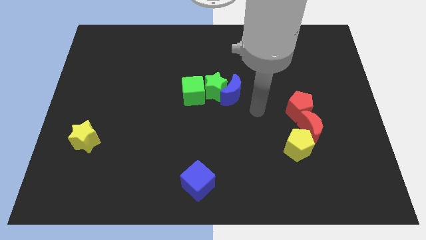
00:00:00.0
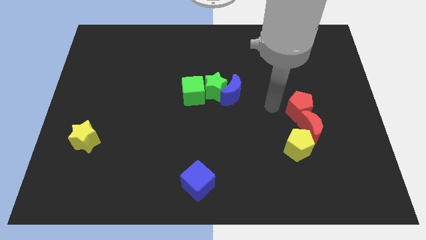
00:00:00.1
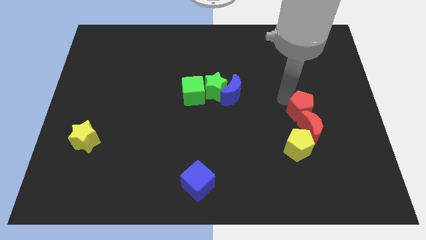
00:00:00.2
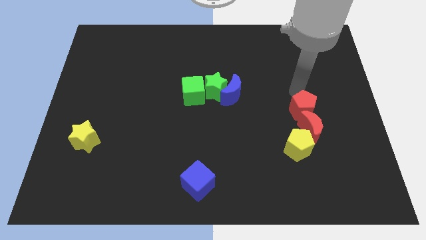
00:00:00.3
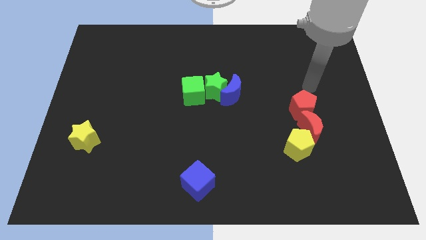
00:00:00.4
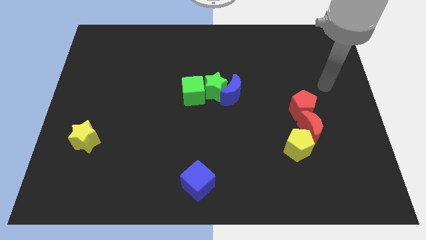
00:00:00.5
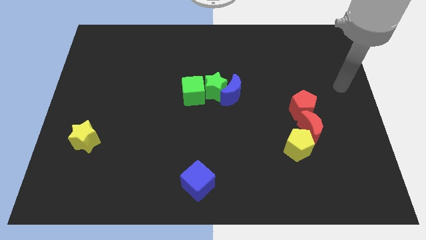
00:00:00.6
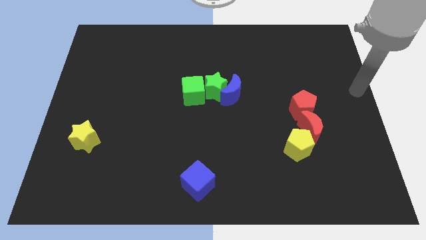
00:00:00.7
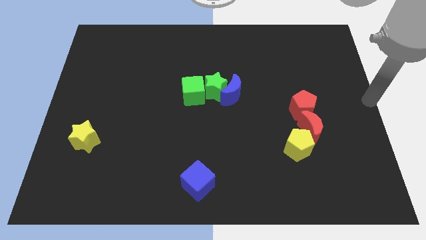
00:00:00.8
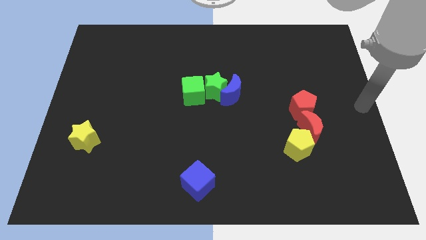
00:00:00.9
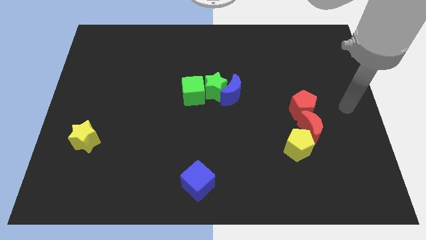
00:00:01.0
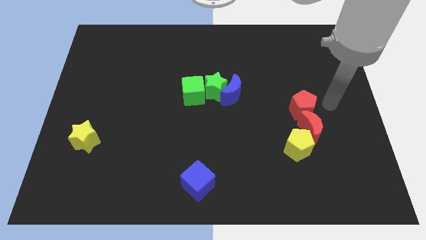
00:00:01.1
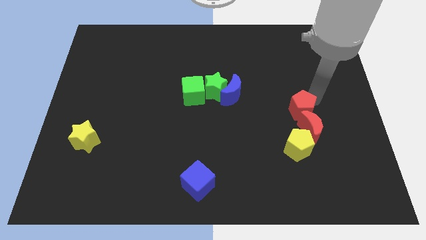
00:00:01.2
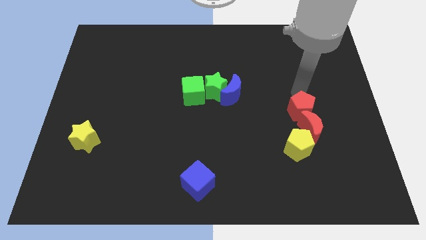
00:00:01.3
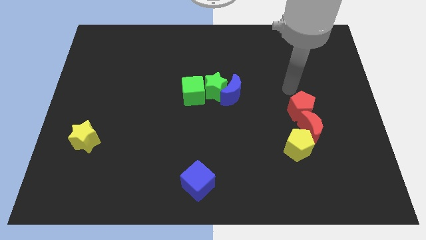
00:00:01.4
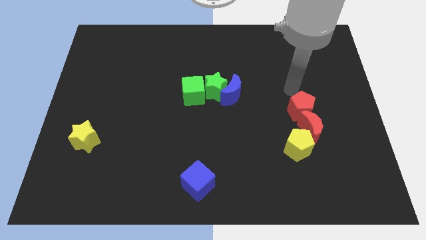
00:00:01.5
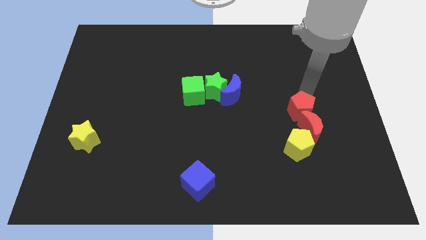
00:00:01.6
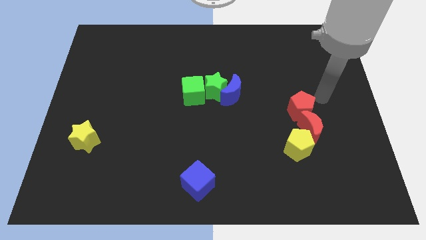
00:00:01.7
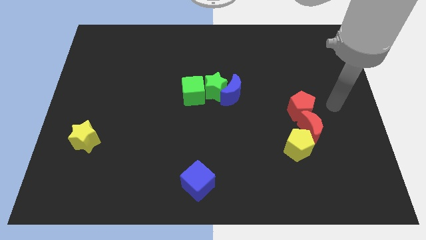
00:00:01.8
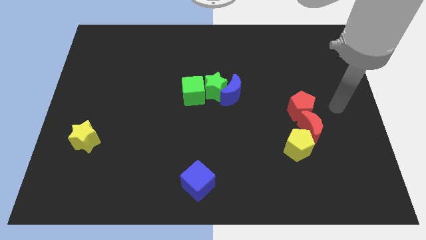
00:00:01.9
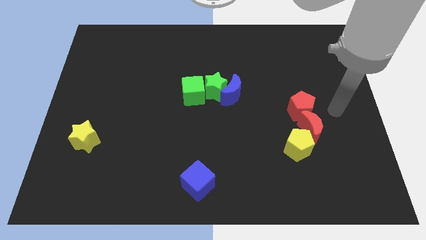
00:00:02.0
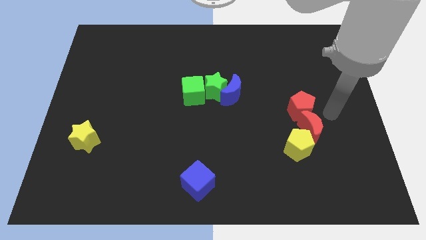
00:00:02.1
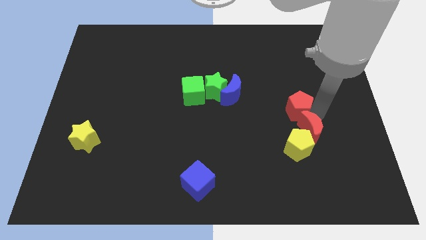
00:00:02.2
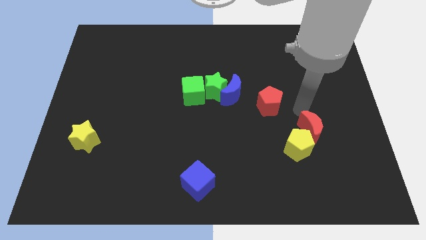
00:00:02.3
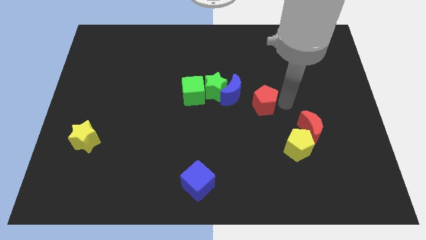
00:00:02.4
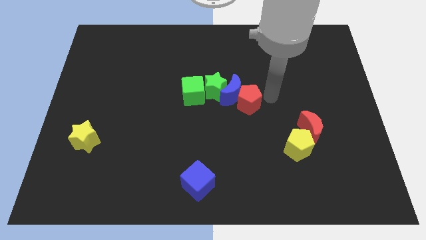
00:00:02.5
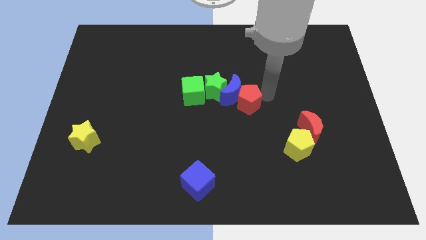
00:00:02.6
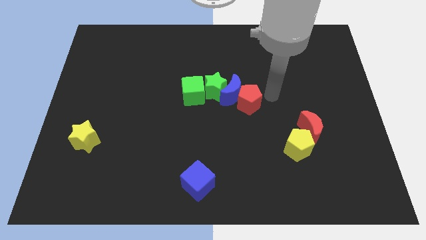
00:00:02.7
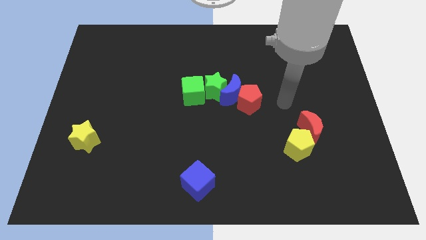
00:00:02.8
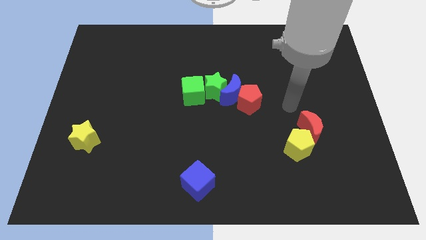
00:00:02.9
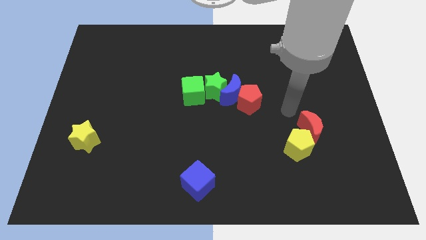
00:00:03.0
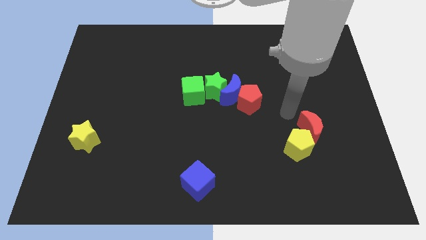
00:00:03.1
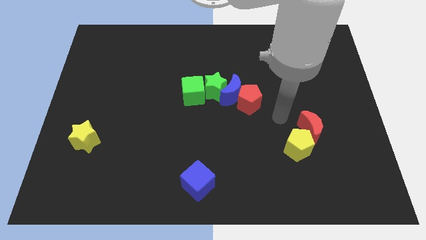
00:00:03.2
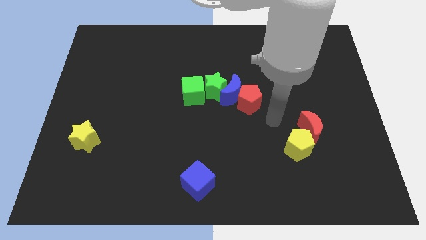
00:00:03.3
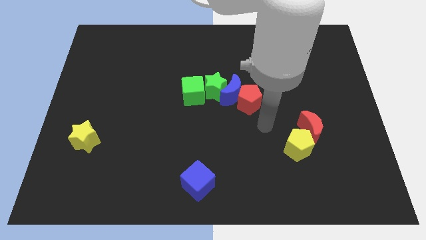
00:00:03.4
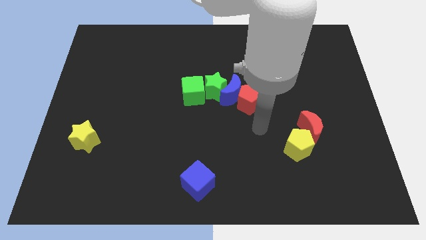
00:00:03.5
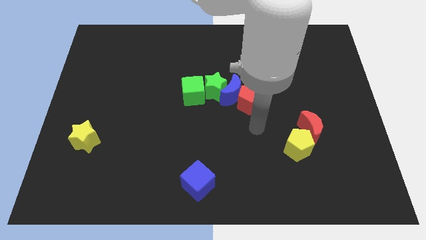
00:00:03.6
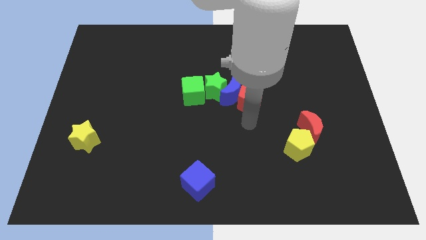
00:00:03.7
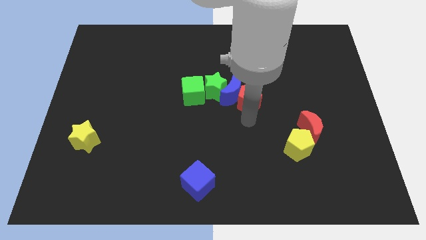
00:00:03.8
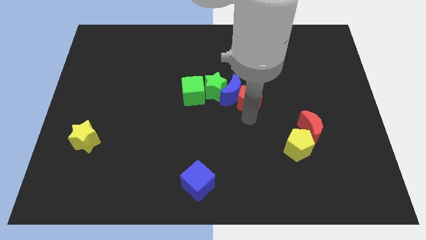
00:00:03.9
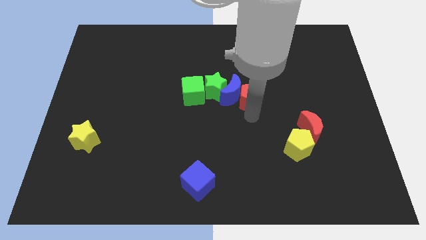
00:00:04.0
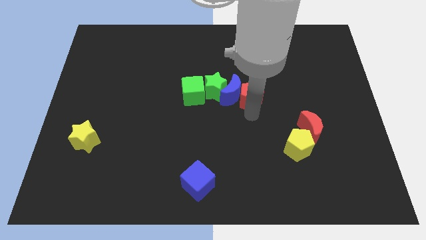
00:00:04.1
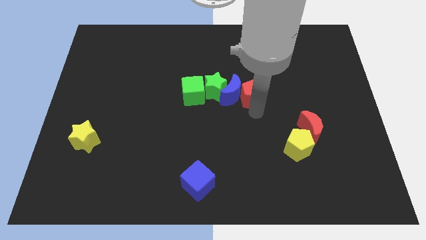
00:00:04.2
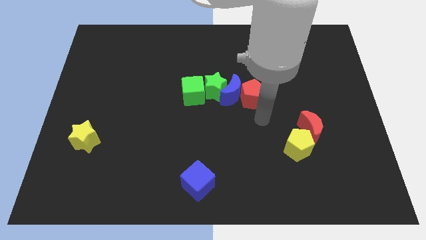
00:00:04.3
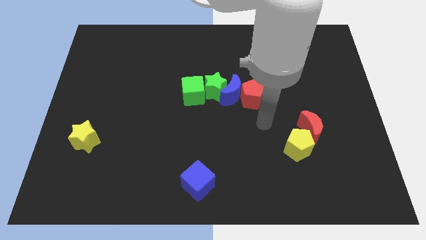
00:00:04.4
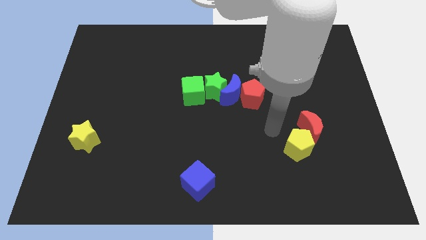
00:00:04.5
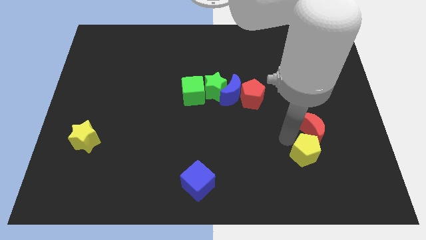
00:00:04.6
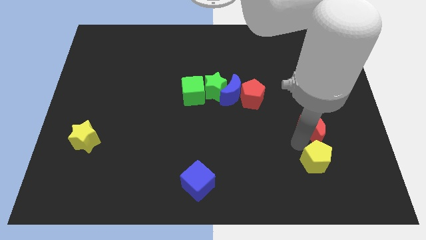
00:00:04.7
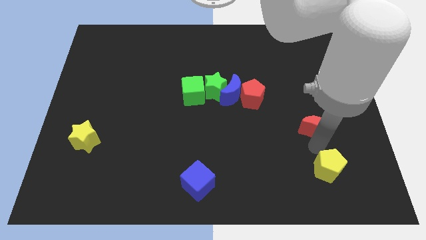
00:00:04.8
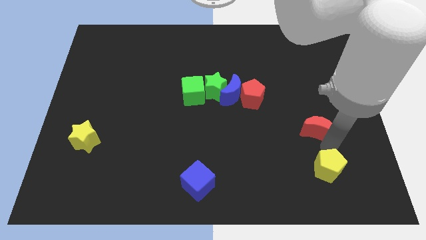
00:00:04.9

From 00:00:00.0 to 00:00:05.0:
separate the red pentagon from the red moon

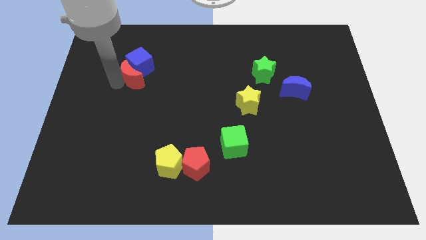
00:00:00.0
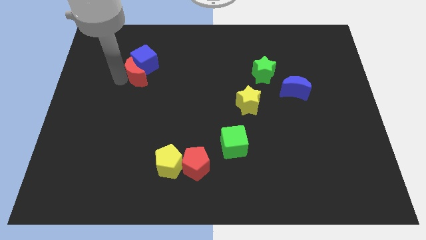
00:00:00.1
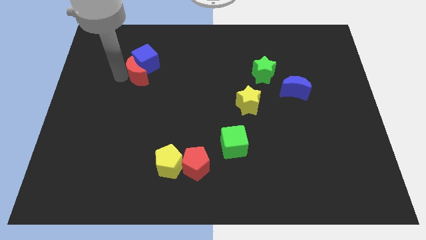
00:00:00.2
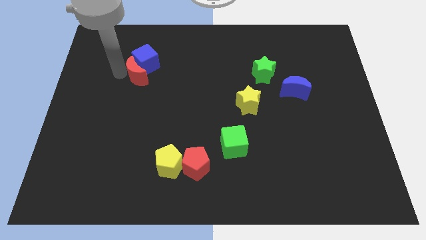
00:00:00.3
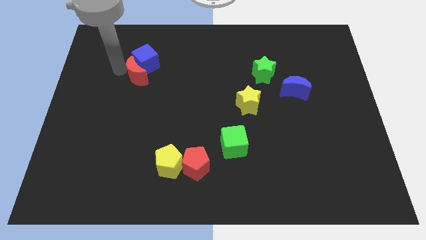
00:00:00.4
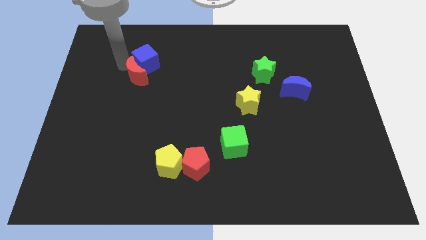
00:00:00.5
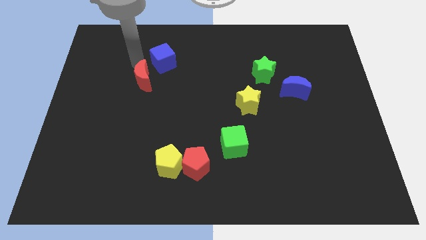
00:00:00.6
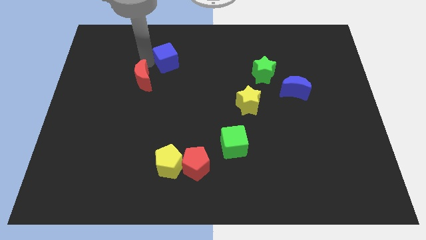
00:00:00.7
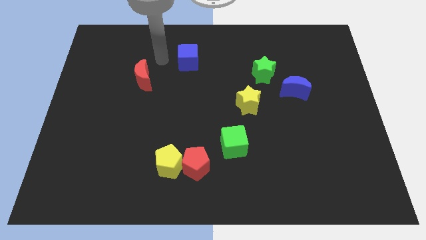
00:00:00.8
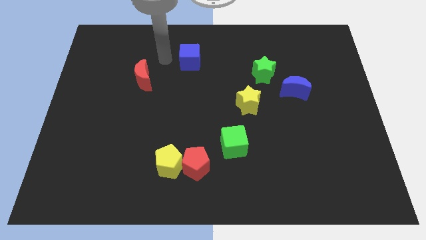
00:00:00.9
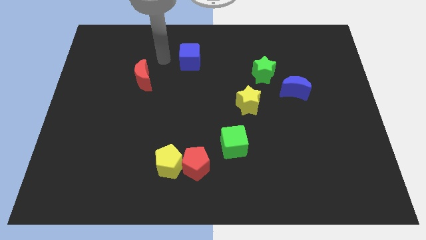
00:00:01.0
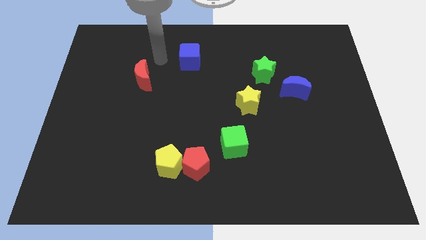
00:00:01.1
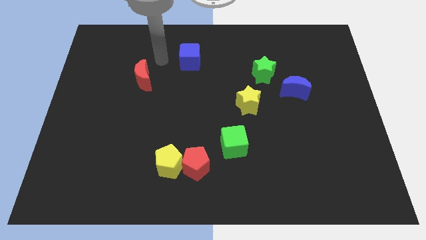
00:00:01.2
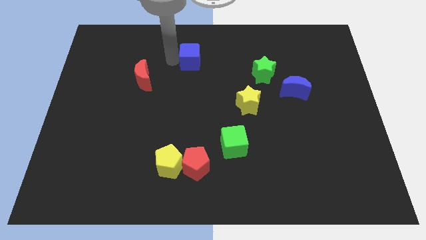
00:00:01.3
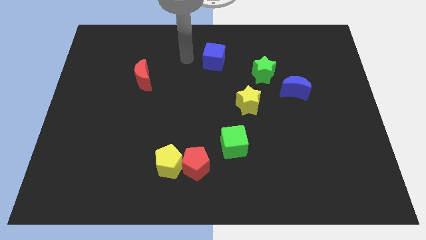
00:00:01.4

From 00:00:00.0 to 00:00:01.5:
separate the blue cube from the red moon

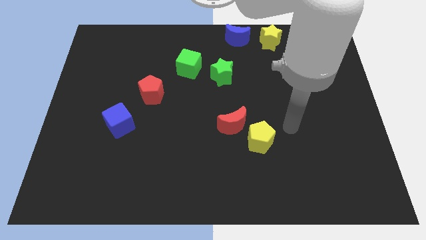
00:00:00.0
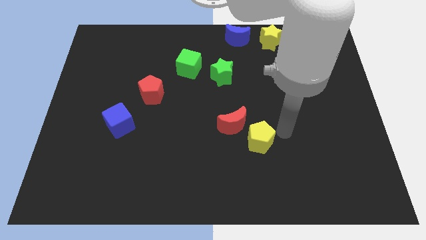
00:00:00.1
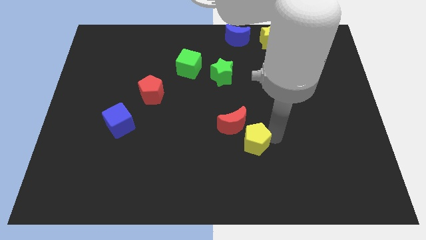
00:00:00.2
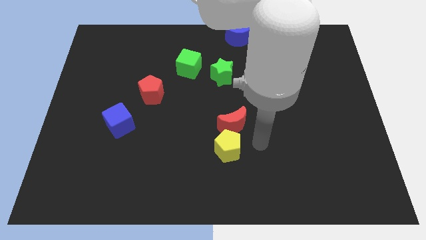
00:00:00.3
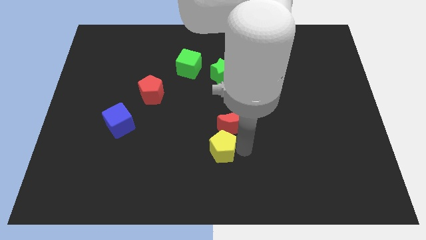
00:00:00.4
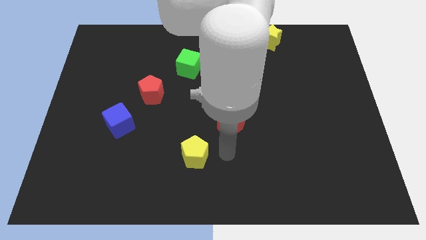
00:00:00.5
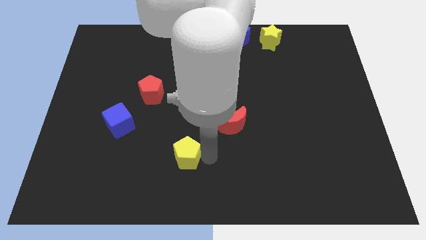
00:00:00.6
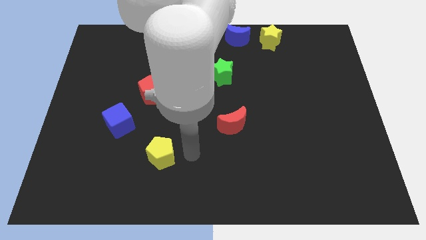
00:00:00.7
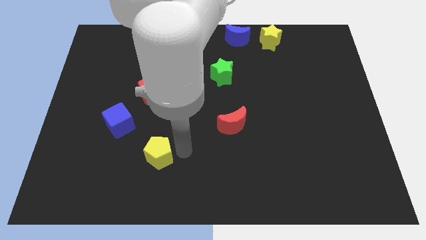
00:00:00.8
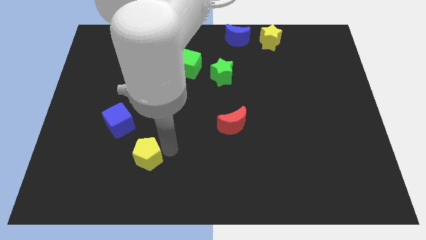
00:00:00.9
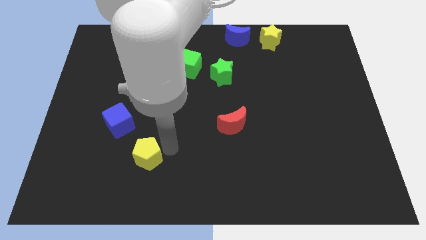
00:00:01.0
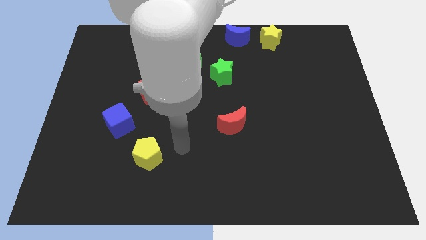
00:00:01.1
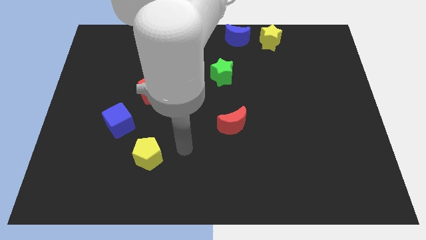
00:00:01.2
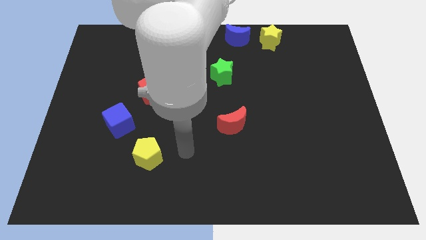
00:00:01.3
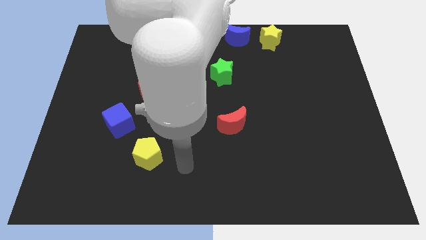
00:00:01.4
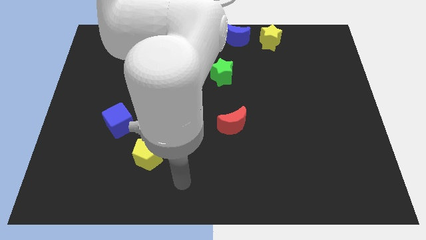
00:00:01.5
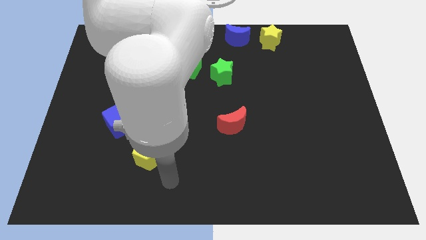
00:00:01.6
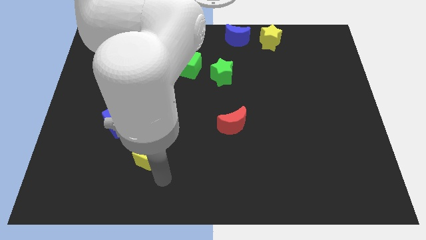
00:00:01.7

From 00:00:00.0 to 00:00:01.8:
move the yellow pentagon diagonally bottom left to the red crescent

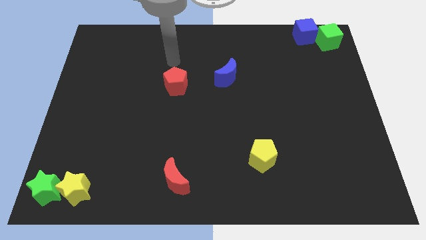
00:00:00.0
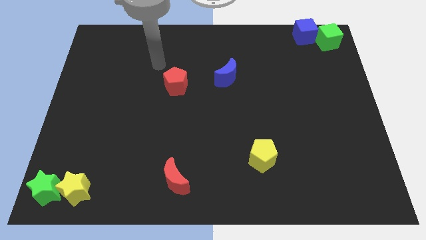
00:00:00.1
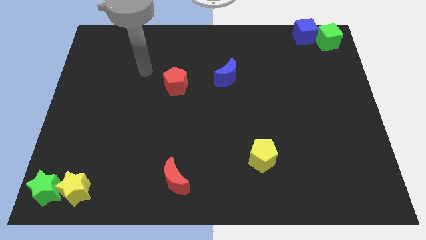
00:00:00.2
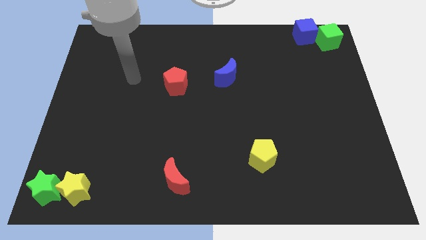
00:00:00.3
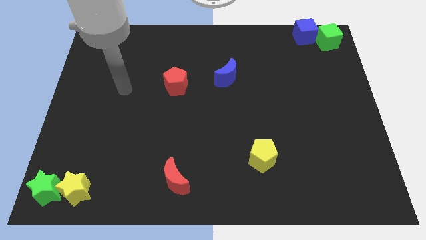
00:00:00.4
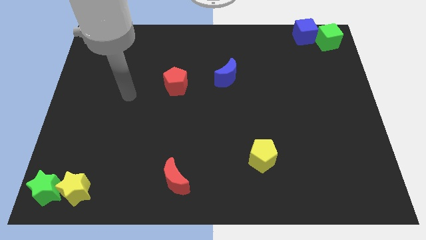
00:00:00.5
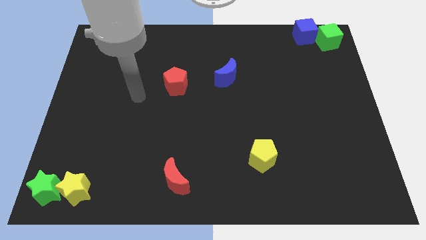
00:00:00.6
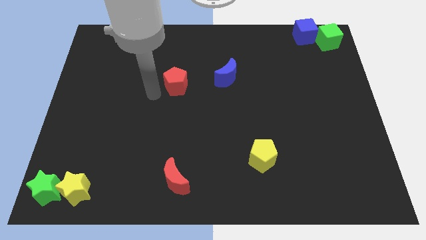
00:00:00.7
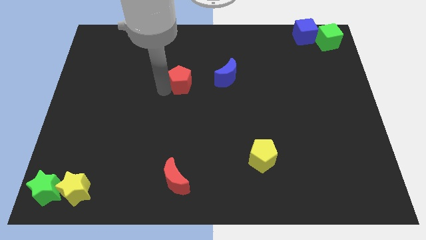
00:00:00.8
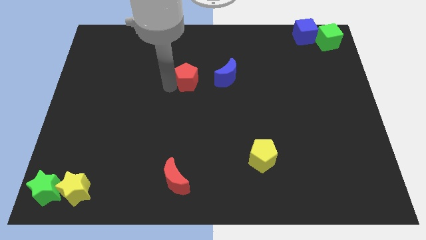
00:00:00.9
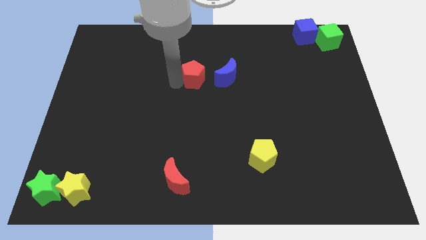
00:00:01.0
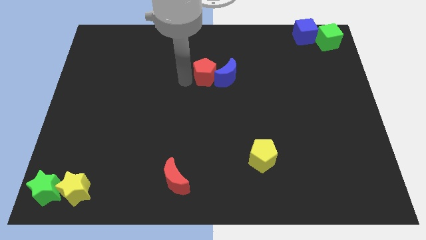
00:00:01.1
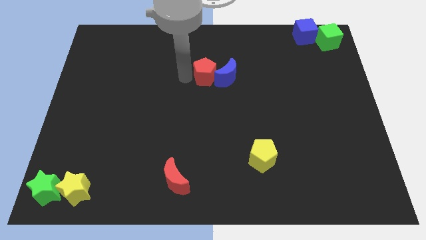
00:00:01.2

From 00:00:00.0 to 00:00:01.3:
move the red pentagon into the blue moon
